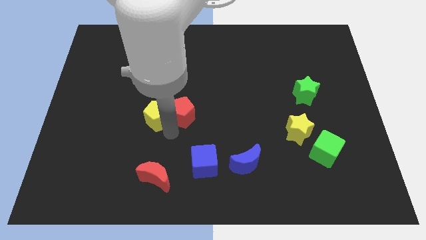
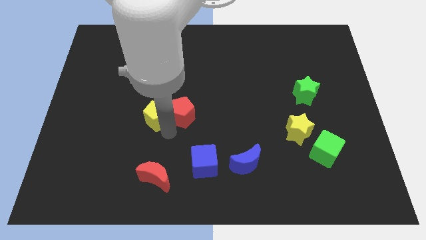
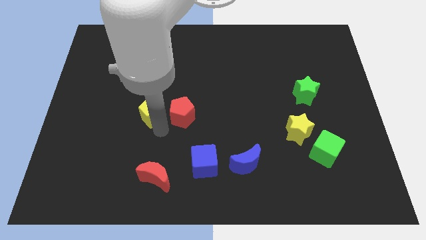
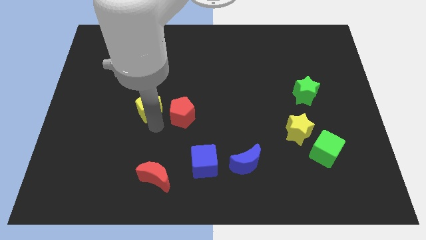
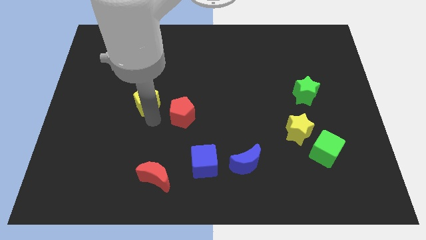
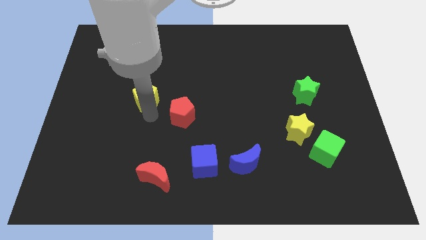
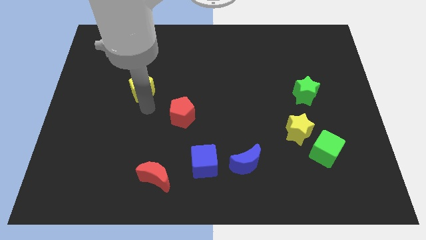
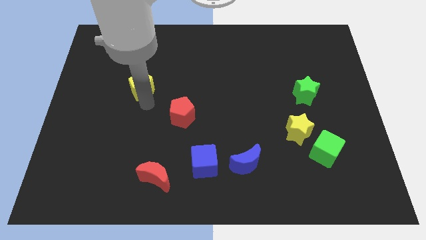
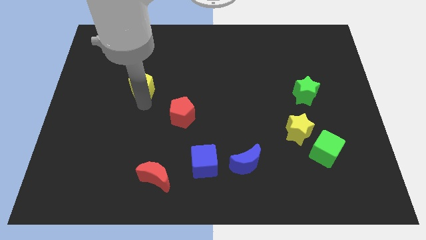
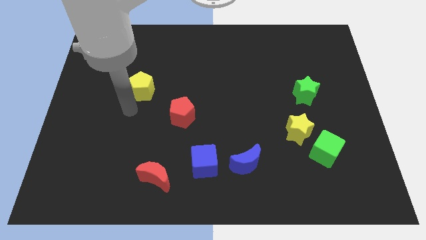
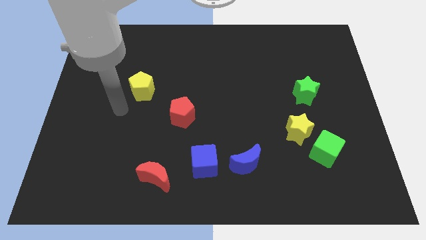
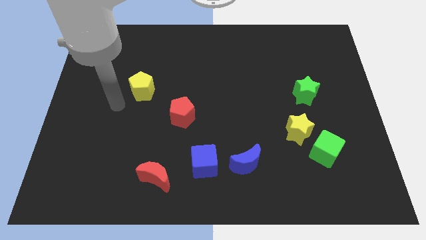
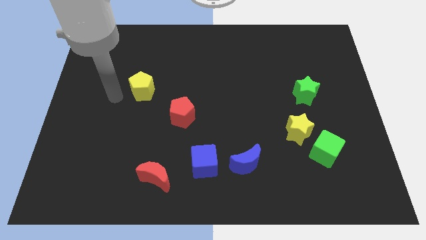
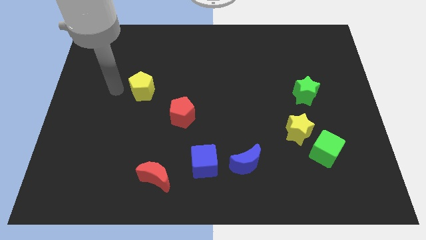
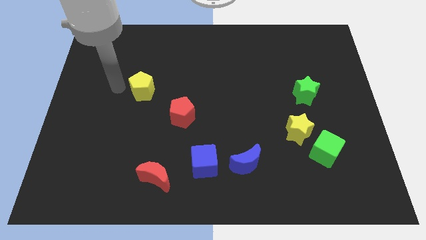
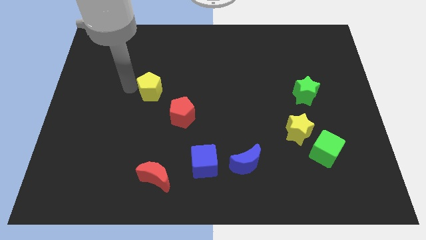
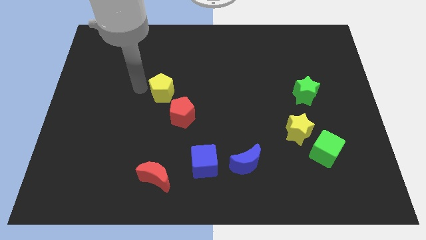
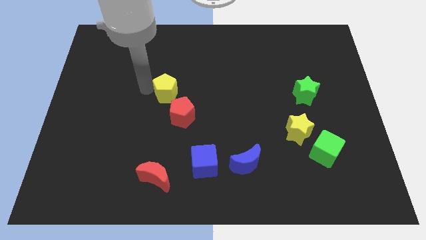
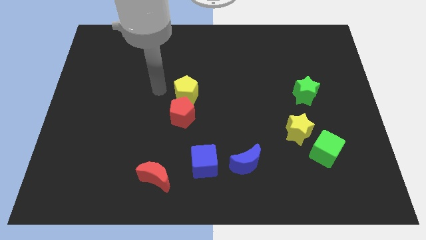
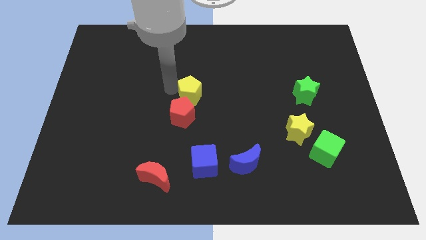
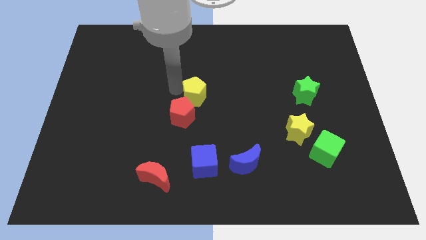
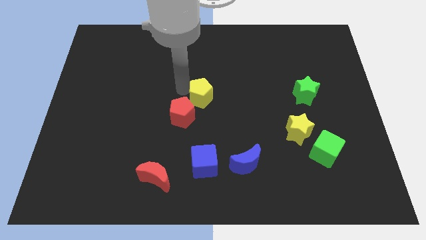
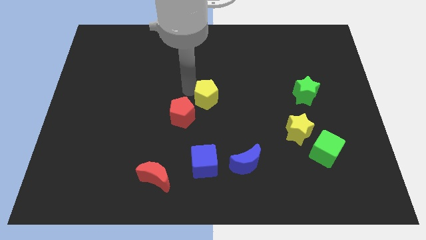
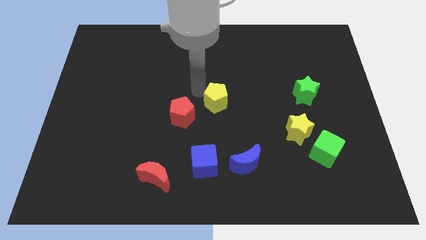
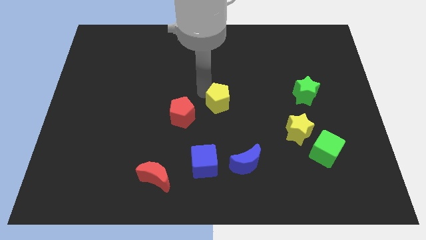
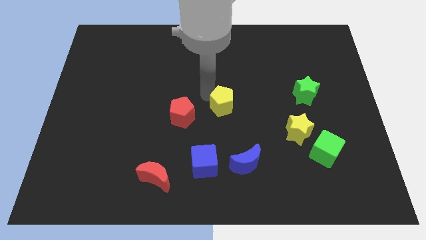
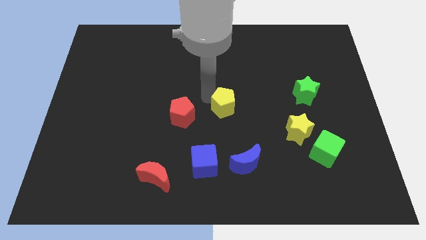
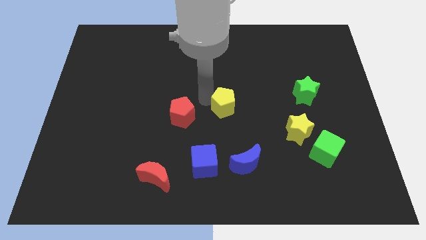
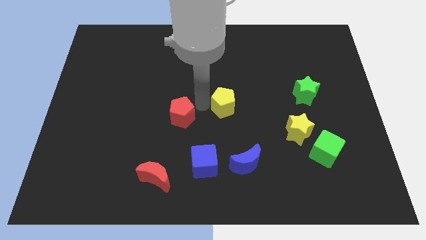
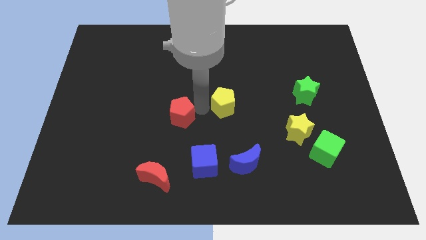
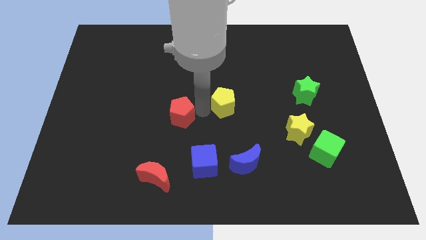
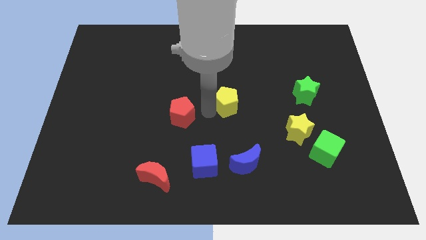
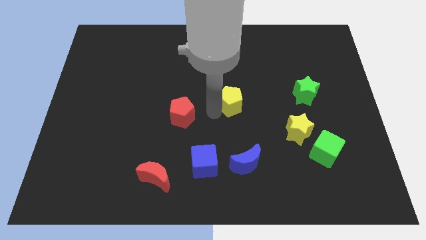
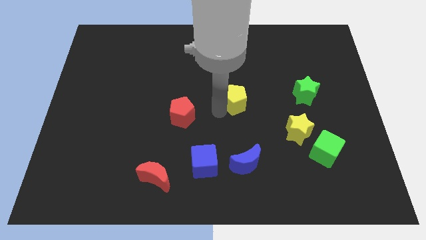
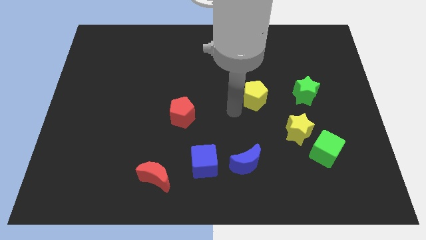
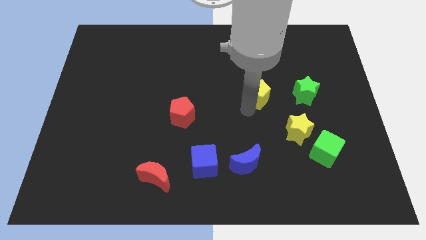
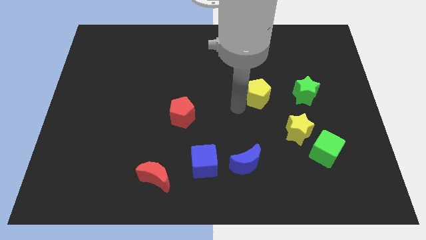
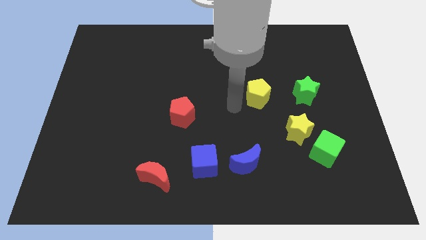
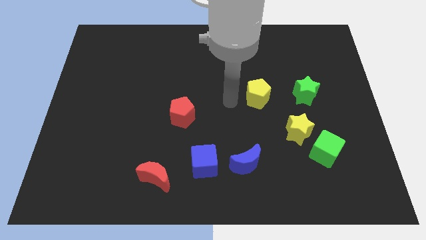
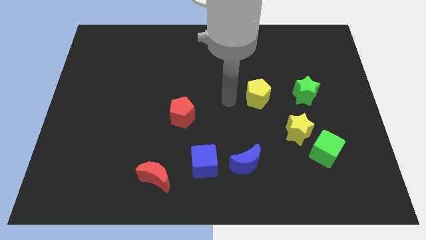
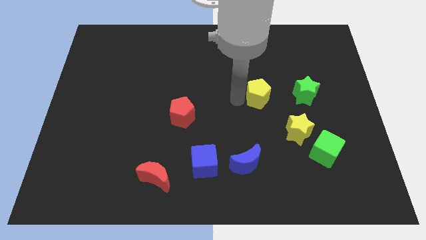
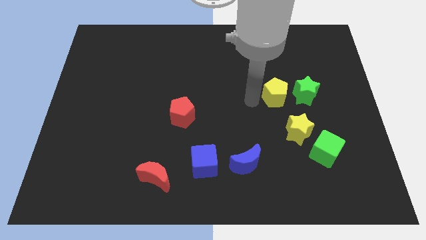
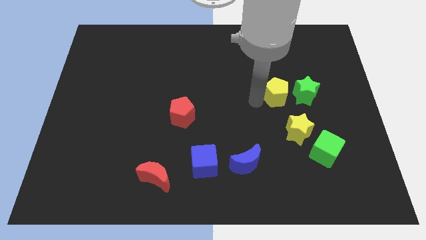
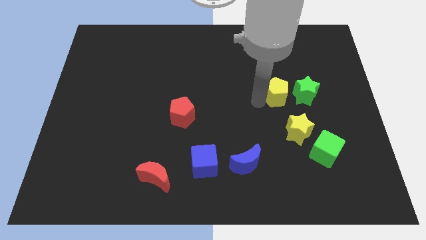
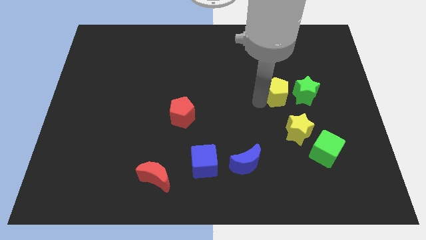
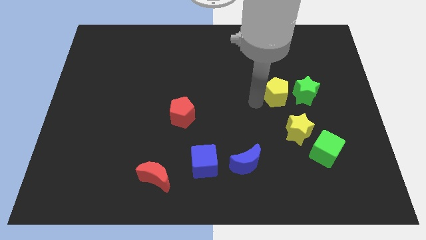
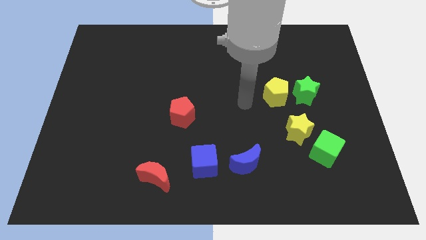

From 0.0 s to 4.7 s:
place the yellow pentagon to the left of the green star

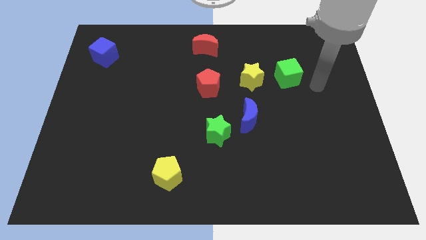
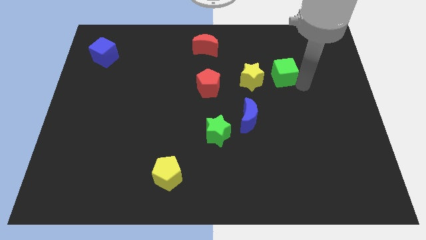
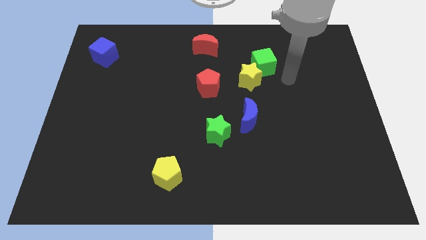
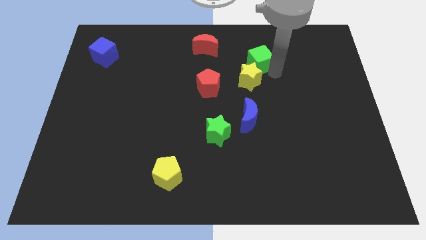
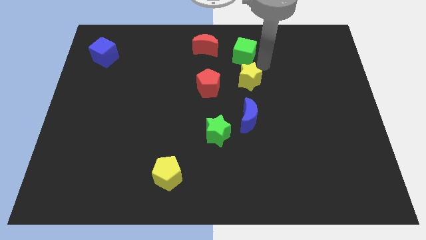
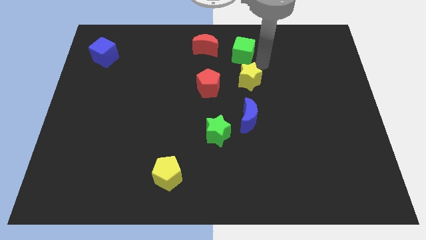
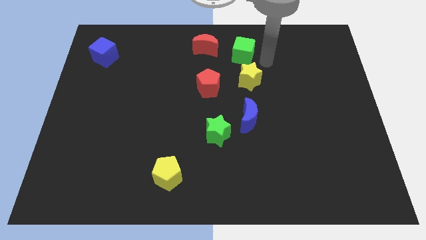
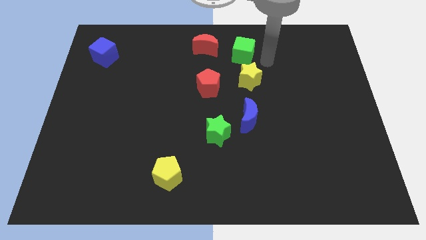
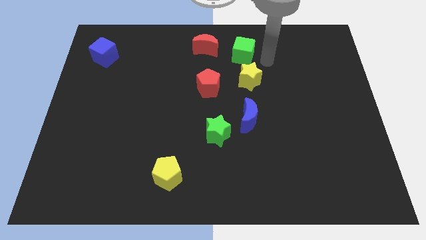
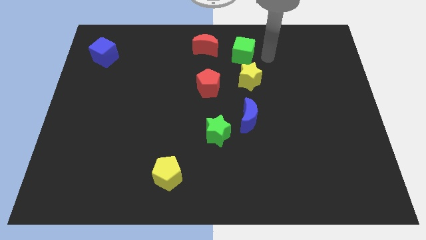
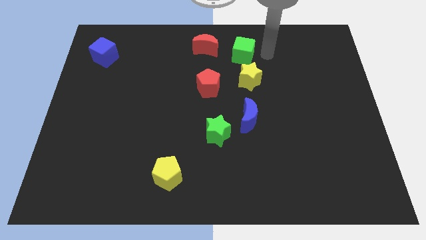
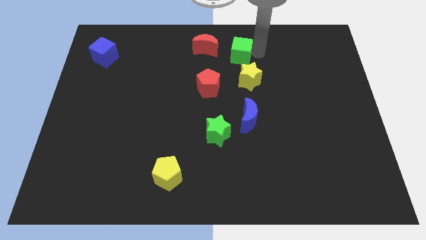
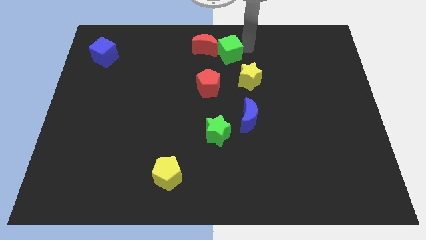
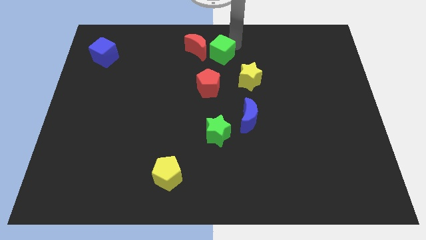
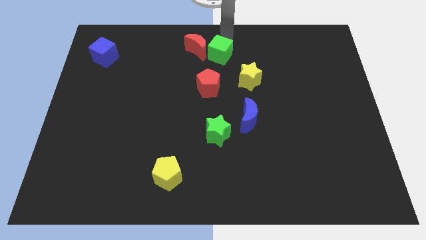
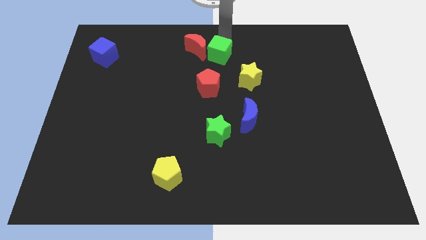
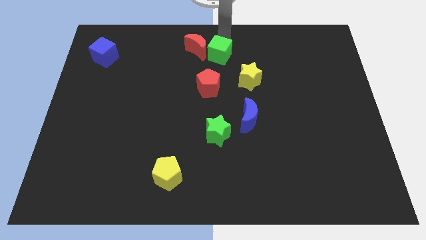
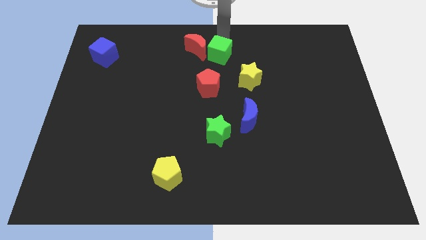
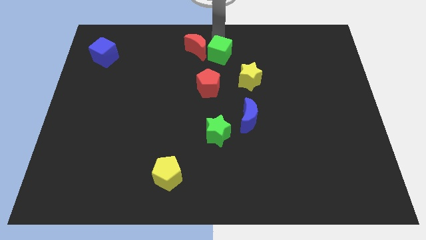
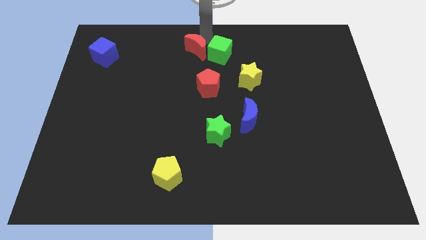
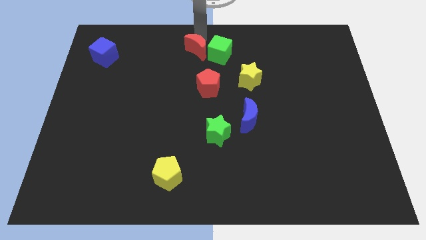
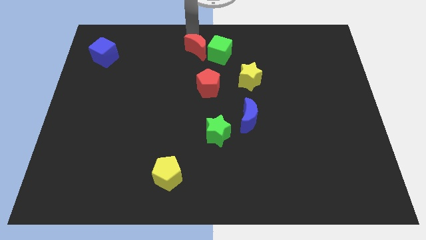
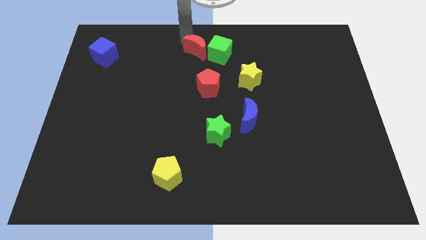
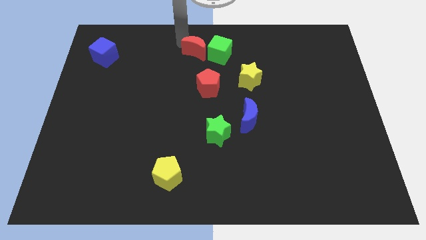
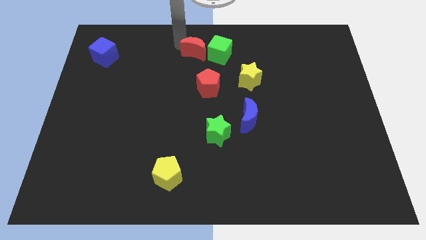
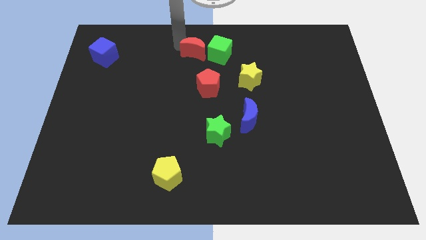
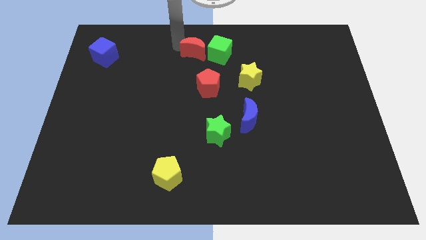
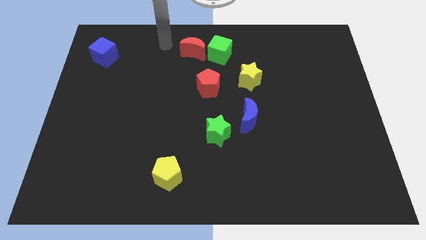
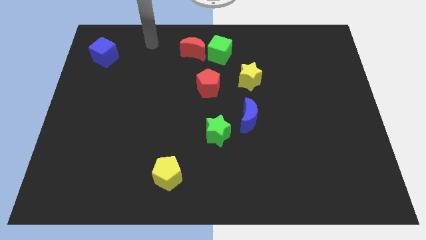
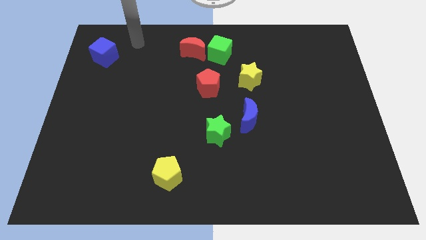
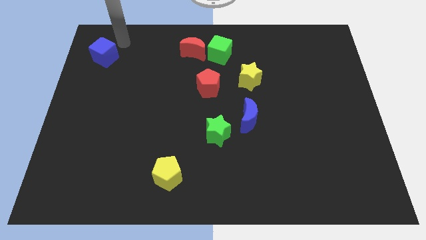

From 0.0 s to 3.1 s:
move the green cube into the red moon

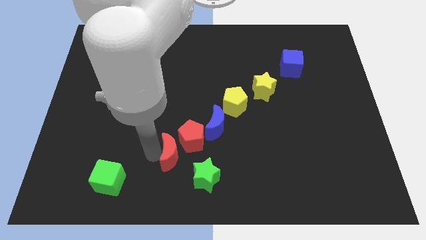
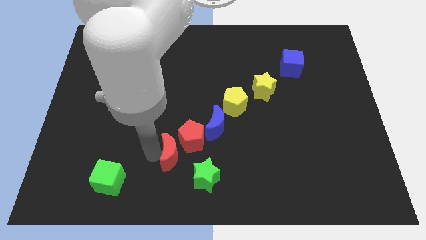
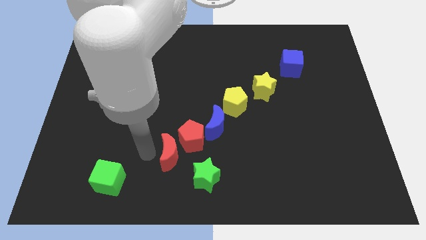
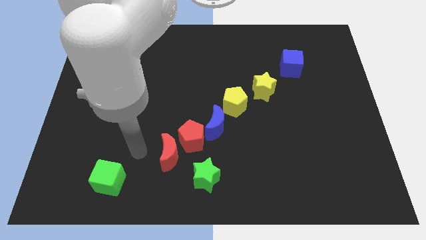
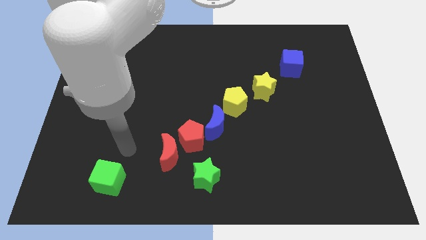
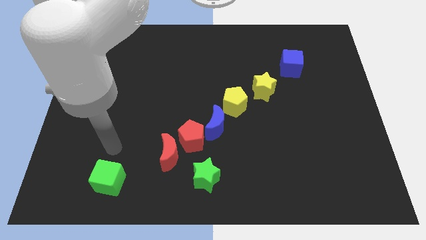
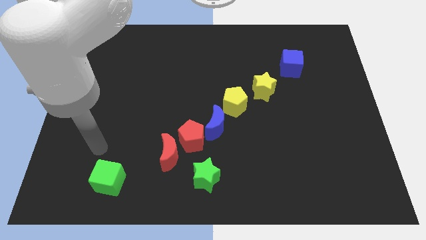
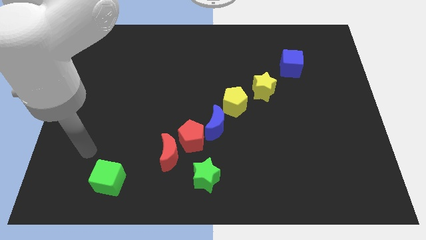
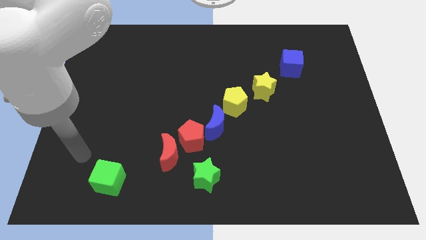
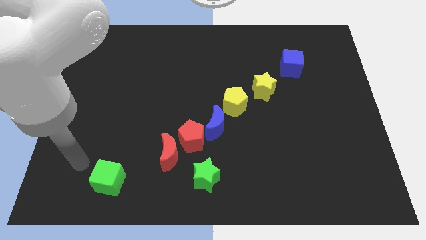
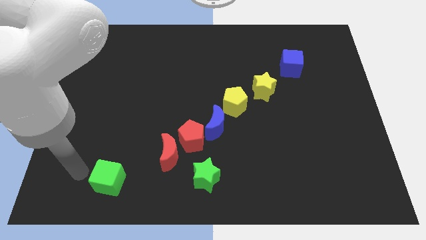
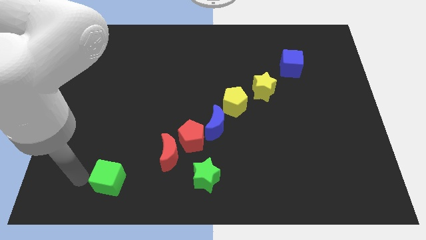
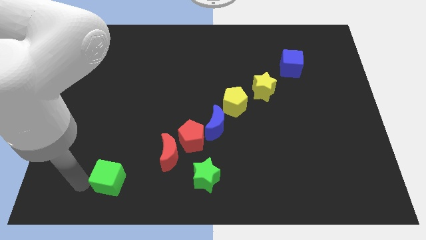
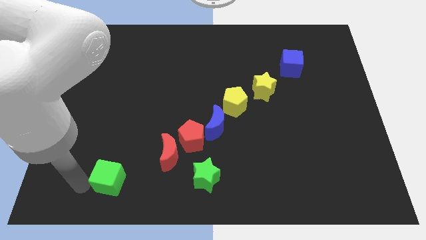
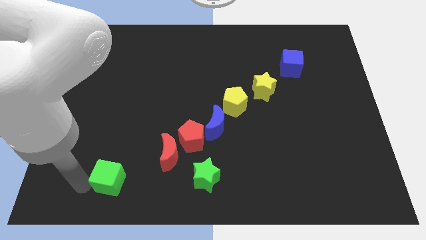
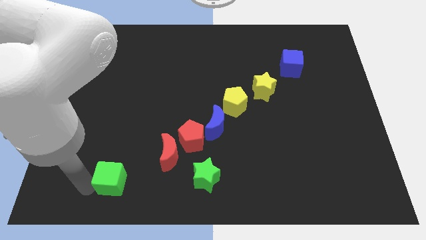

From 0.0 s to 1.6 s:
place arm on left side of green cube
